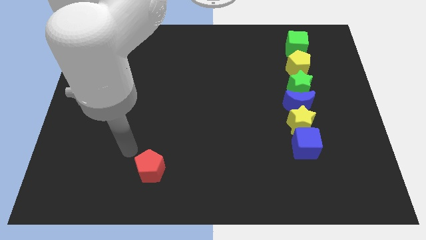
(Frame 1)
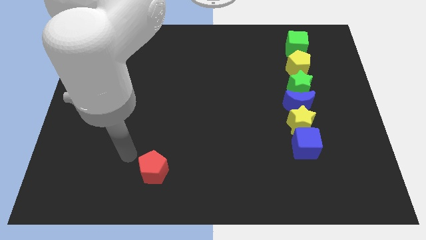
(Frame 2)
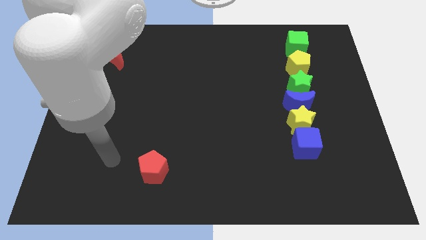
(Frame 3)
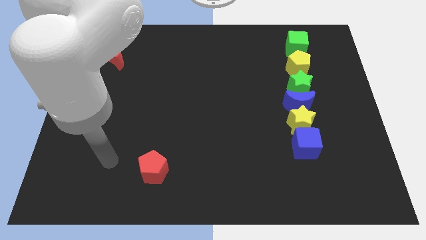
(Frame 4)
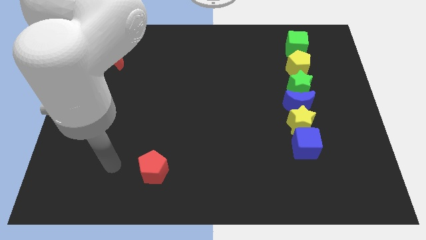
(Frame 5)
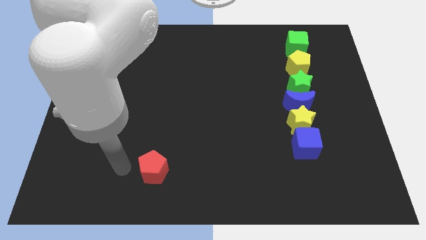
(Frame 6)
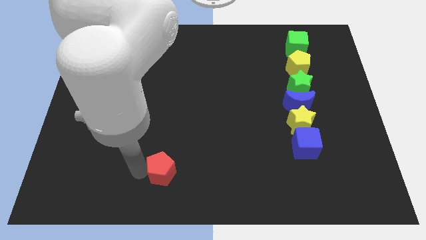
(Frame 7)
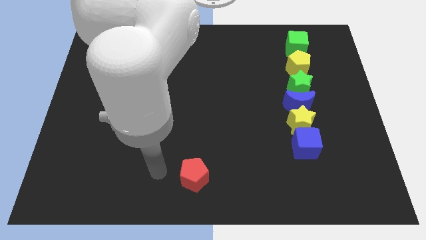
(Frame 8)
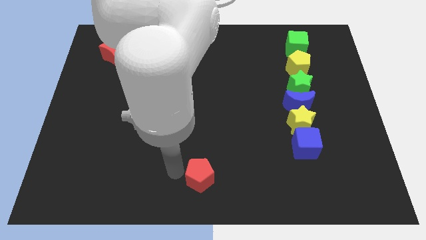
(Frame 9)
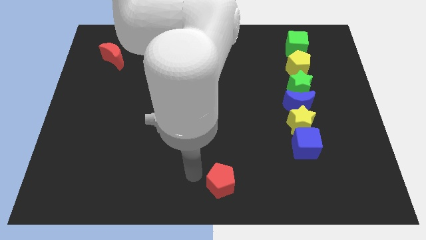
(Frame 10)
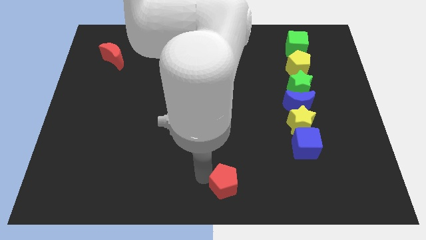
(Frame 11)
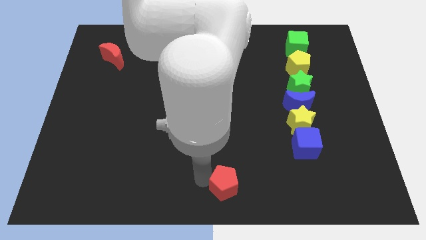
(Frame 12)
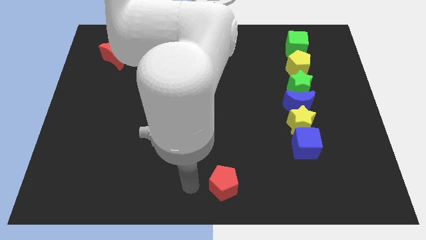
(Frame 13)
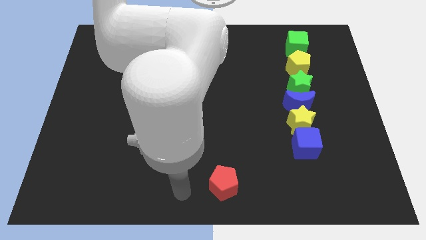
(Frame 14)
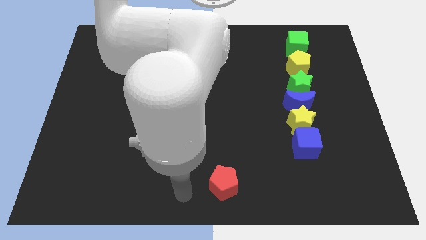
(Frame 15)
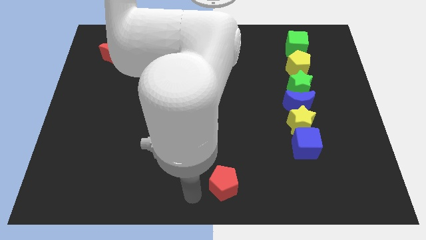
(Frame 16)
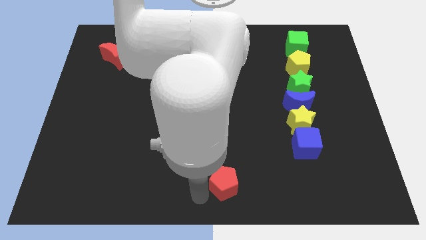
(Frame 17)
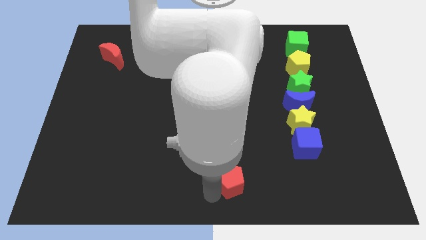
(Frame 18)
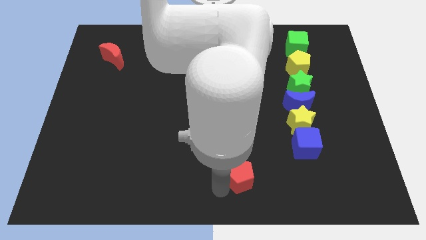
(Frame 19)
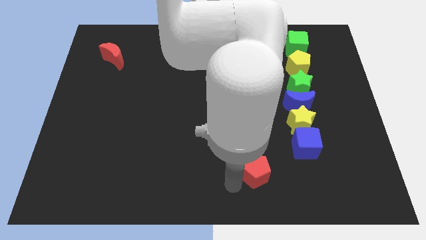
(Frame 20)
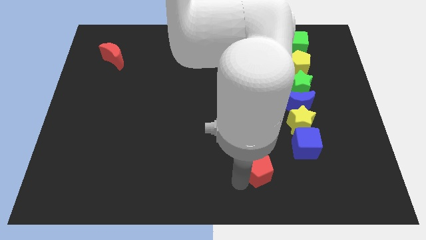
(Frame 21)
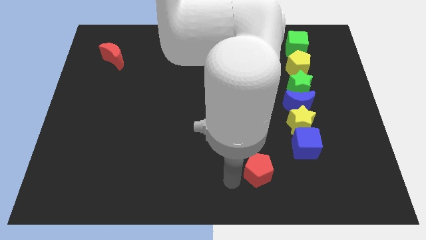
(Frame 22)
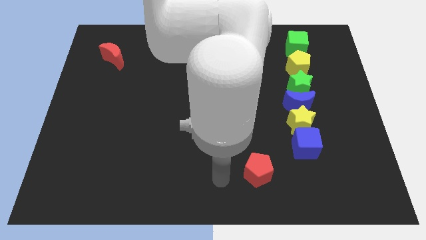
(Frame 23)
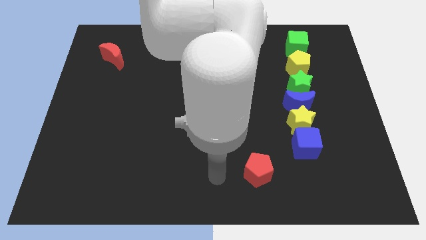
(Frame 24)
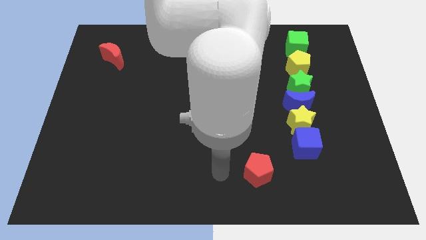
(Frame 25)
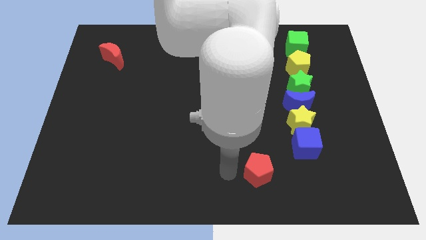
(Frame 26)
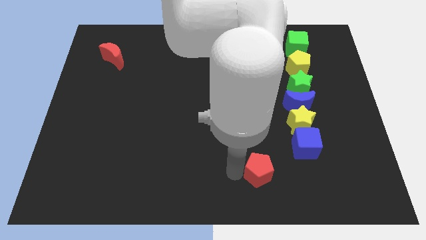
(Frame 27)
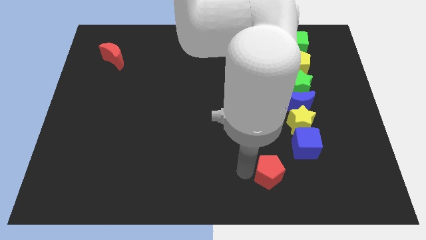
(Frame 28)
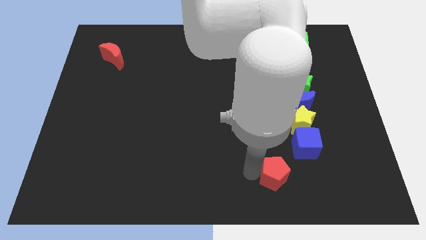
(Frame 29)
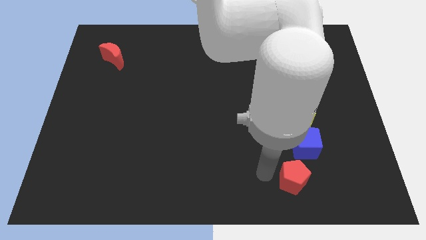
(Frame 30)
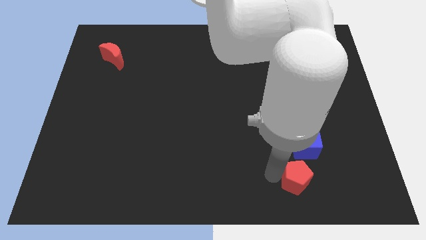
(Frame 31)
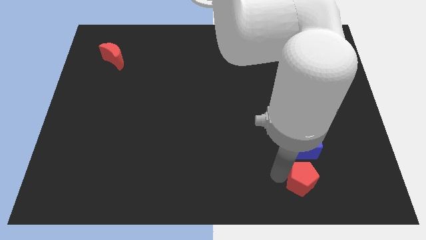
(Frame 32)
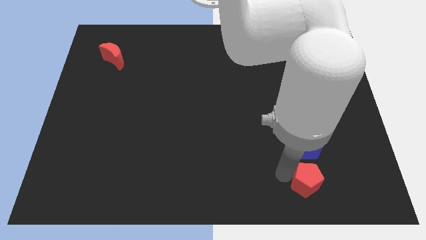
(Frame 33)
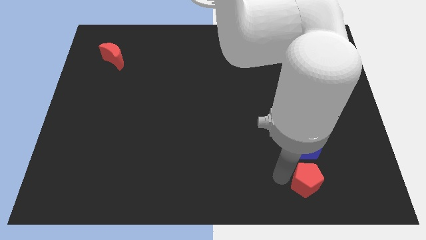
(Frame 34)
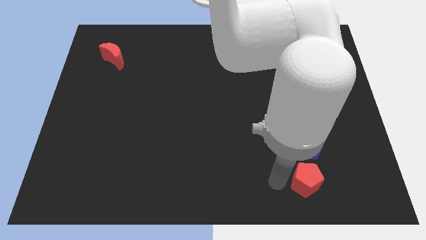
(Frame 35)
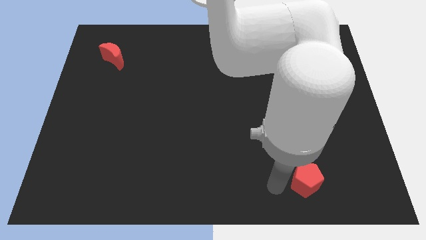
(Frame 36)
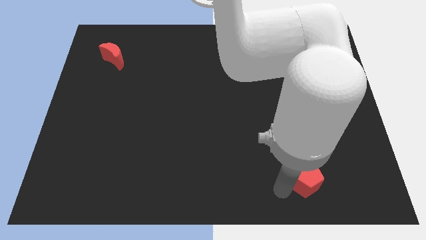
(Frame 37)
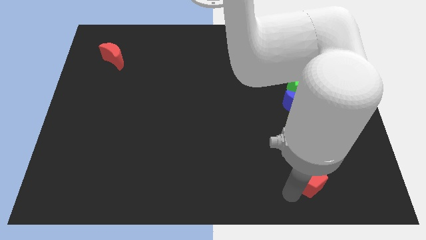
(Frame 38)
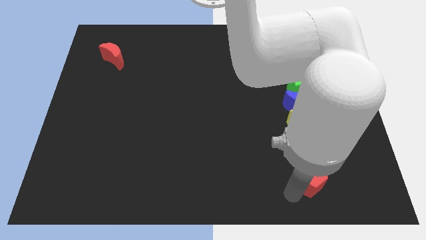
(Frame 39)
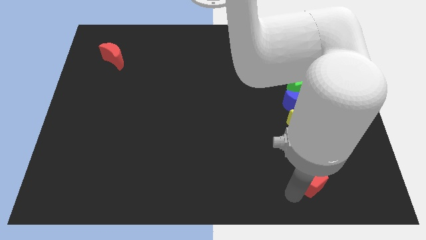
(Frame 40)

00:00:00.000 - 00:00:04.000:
place the red pentagon under the blue cube

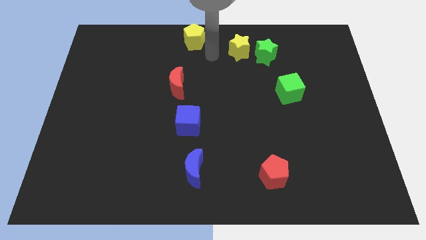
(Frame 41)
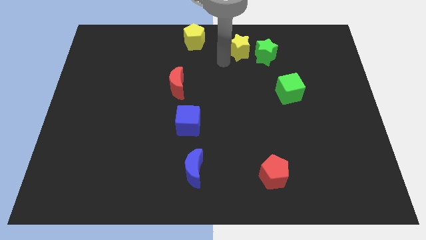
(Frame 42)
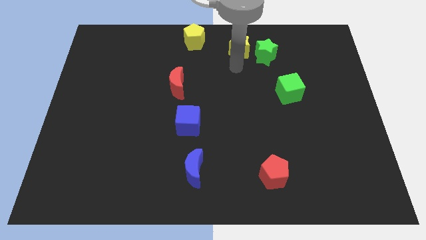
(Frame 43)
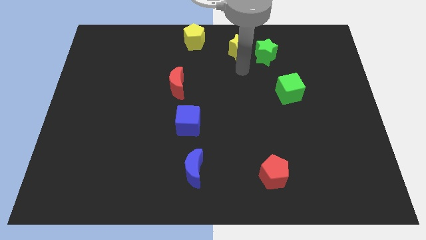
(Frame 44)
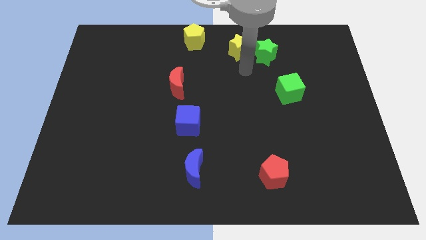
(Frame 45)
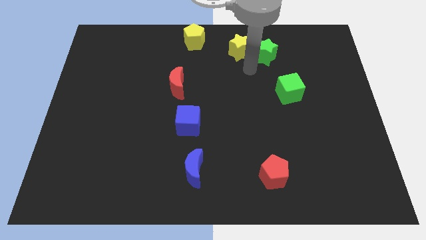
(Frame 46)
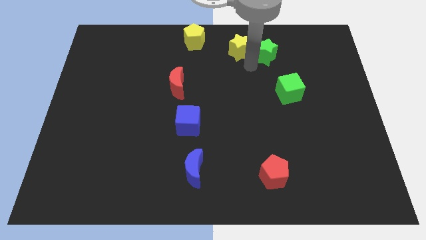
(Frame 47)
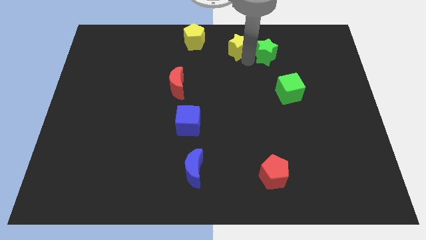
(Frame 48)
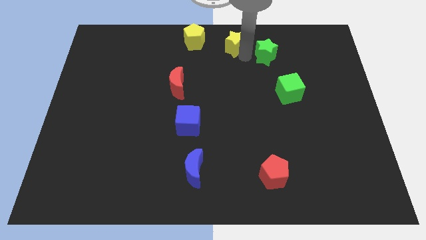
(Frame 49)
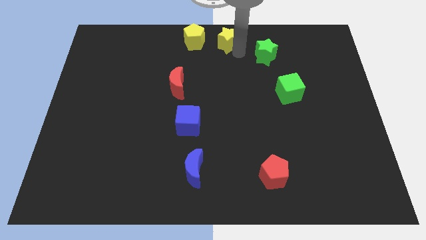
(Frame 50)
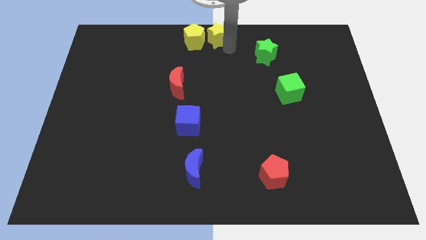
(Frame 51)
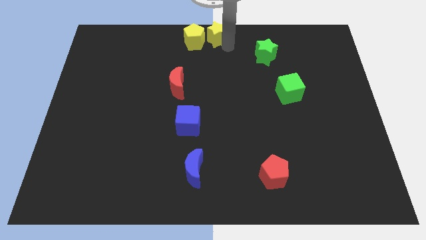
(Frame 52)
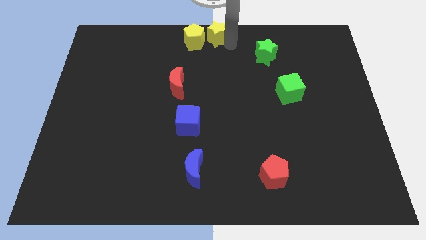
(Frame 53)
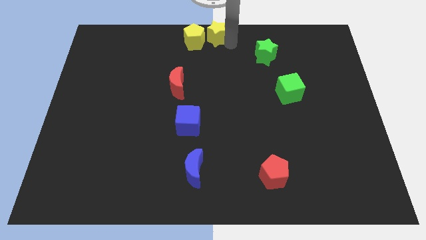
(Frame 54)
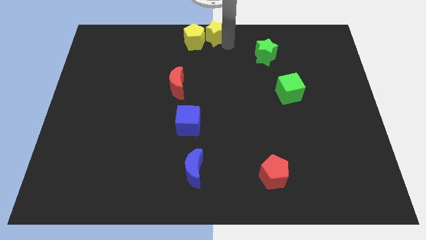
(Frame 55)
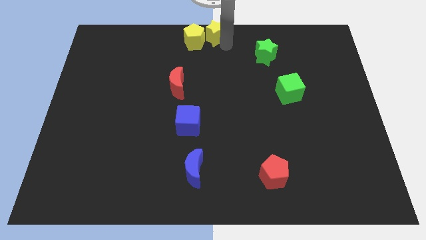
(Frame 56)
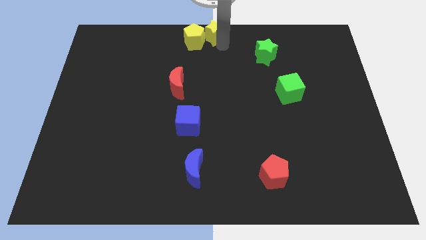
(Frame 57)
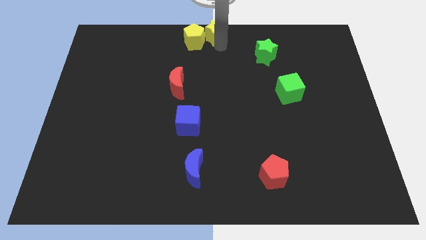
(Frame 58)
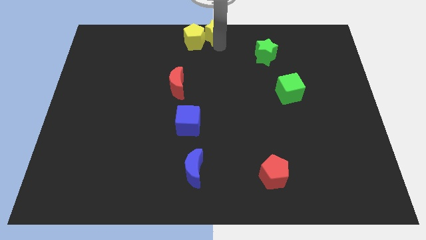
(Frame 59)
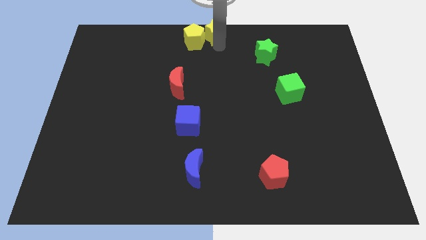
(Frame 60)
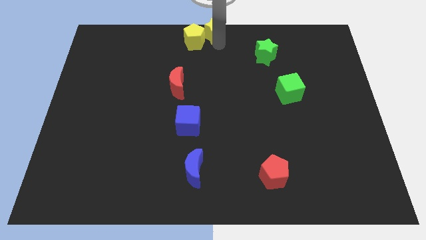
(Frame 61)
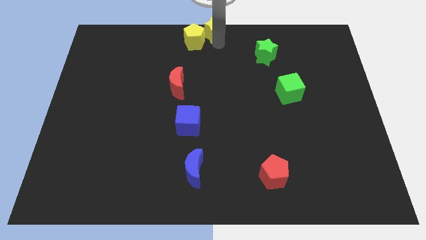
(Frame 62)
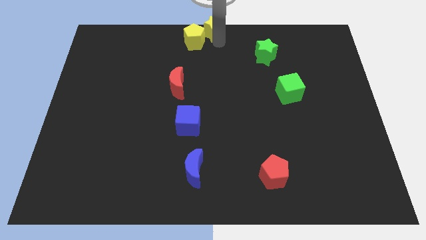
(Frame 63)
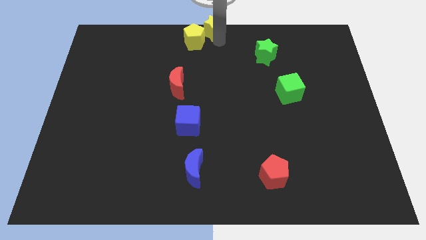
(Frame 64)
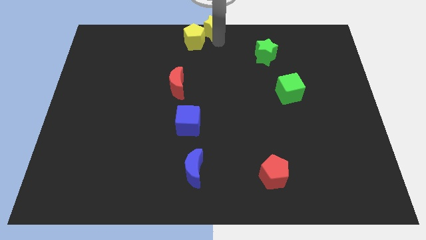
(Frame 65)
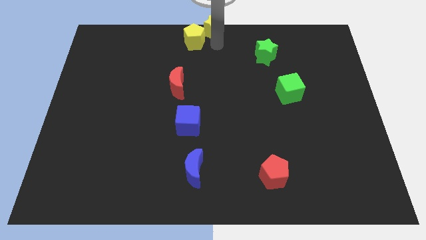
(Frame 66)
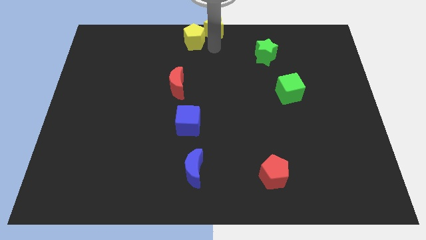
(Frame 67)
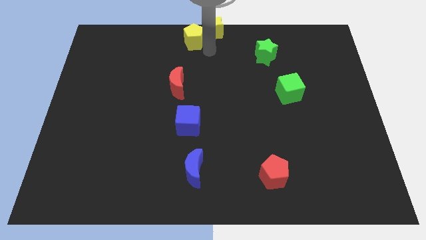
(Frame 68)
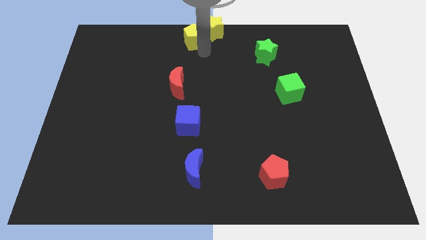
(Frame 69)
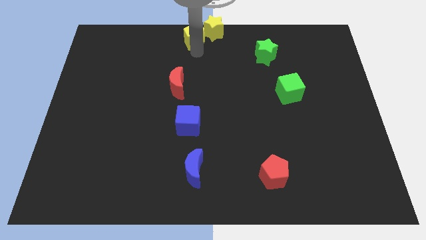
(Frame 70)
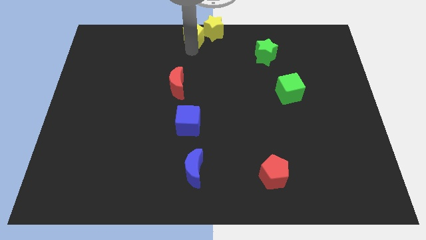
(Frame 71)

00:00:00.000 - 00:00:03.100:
push the yellow star towards the top center of the board

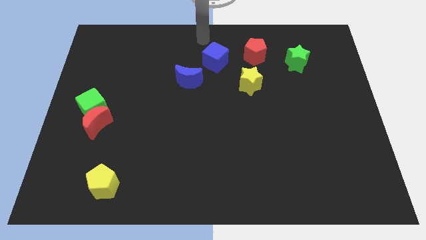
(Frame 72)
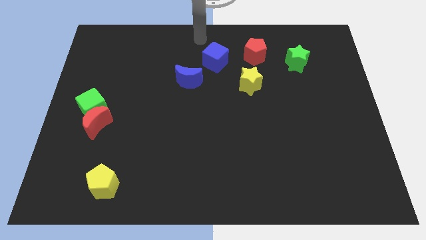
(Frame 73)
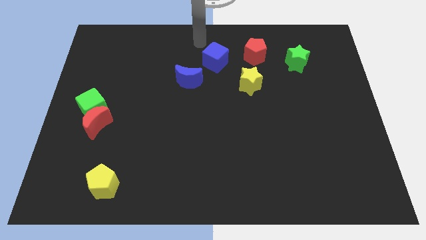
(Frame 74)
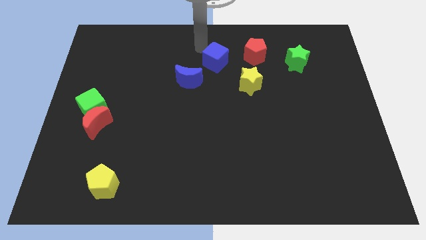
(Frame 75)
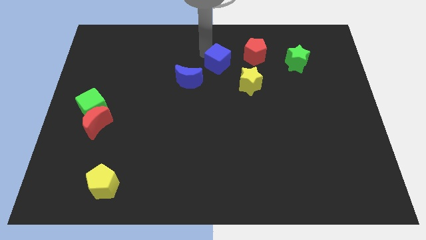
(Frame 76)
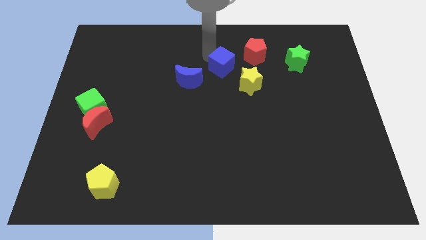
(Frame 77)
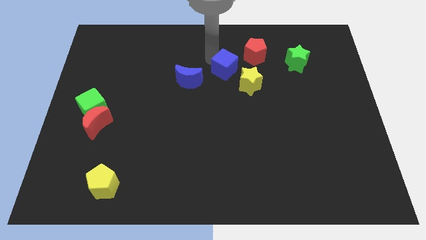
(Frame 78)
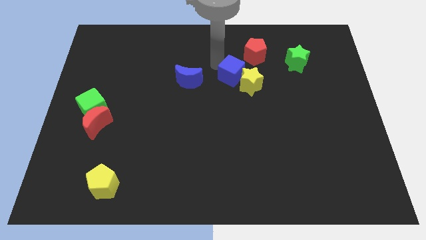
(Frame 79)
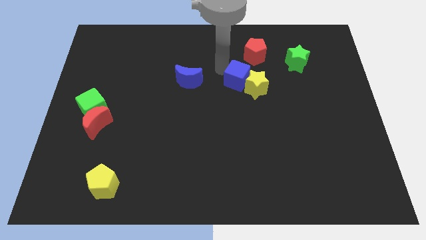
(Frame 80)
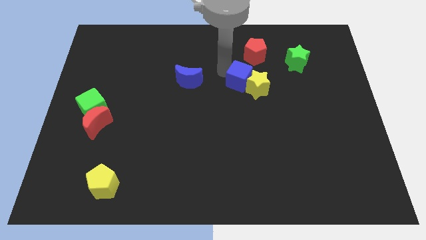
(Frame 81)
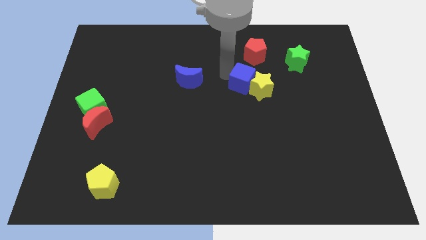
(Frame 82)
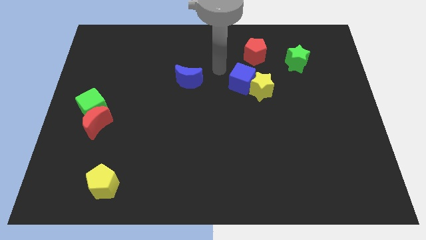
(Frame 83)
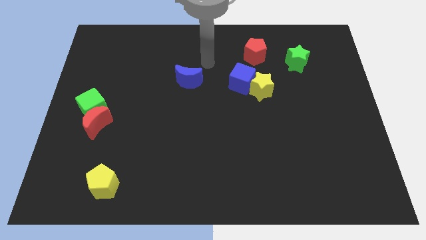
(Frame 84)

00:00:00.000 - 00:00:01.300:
push the blue cube into the yellow star

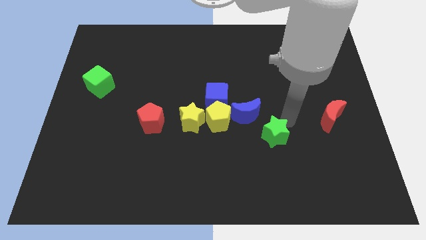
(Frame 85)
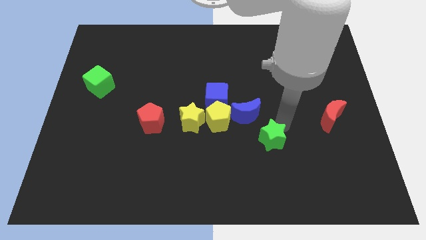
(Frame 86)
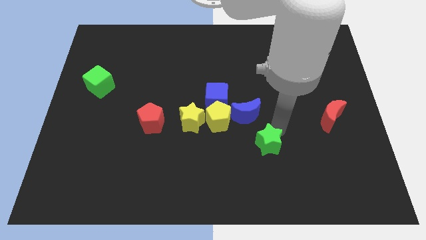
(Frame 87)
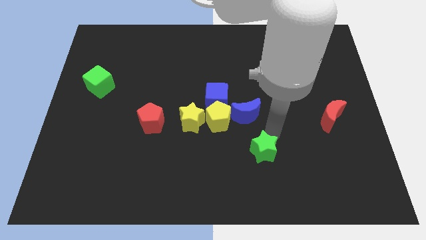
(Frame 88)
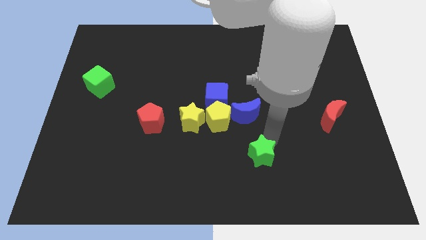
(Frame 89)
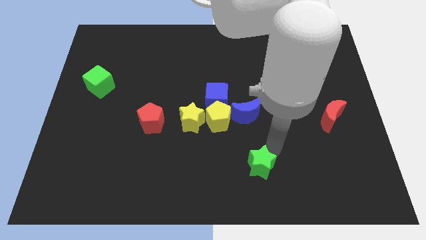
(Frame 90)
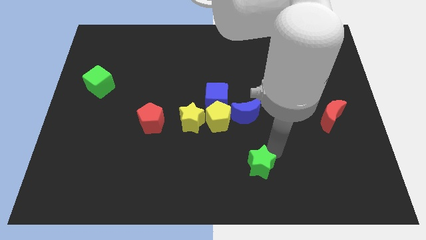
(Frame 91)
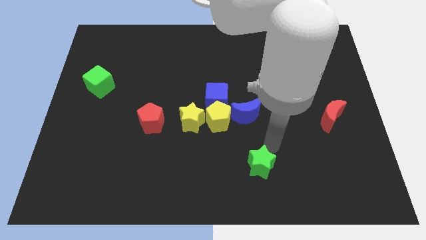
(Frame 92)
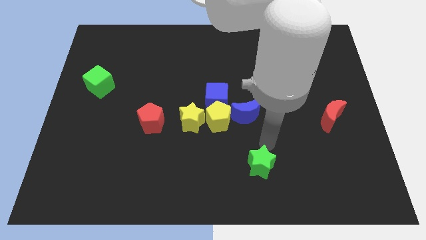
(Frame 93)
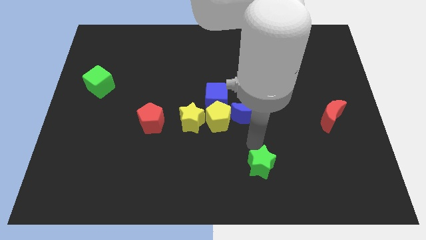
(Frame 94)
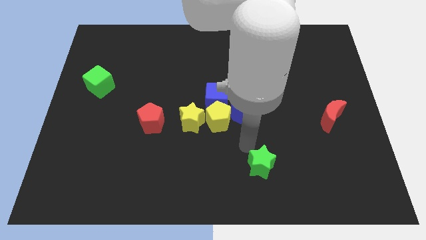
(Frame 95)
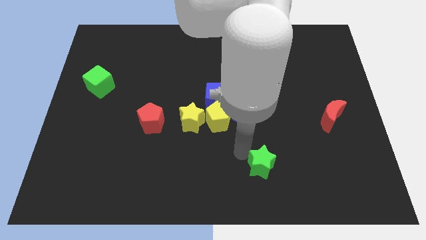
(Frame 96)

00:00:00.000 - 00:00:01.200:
move the star vertically below the blue moon
